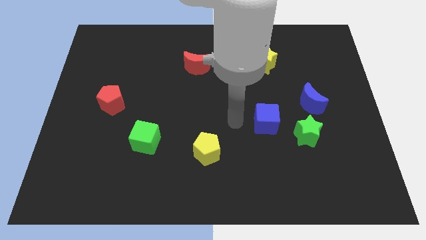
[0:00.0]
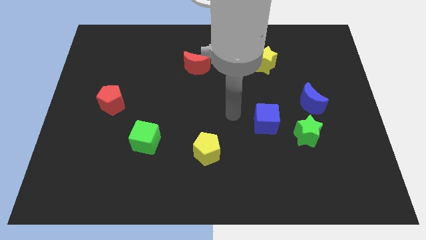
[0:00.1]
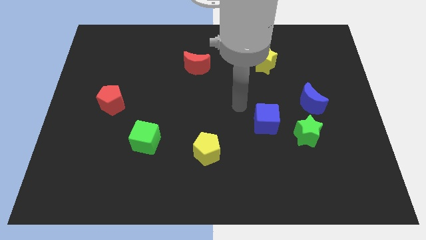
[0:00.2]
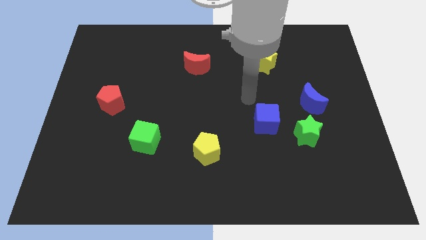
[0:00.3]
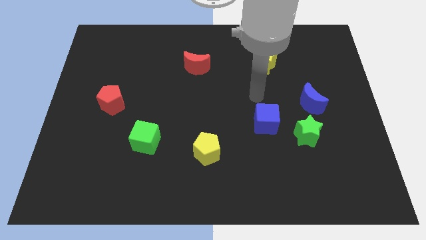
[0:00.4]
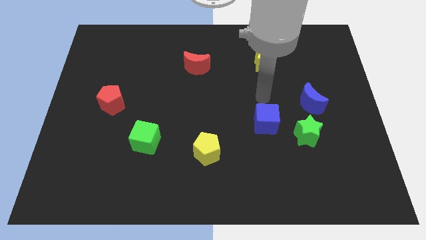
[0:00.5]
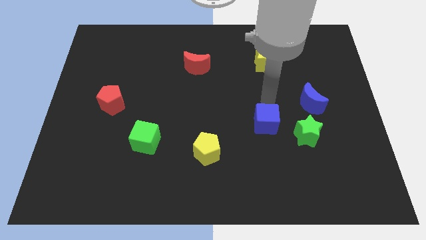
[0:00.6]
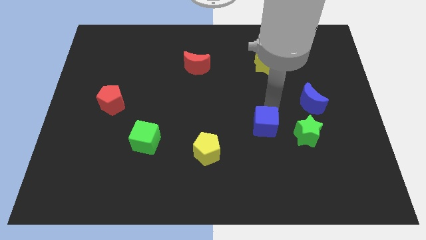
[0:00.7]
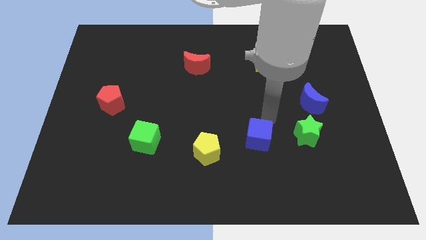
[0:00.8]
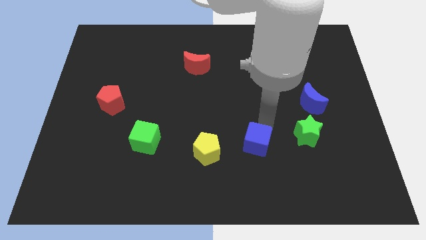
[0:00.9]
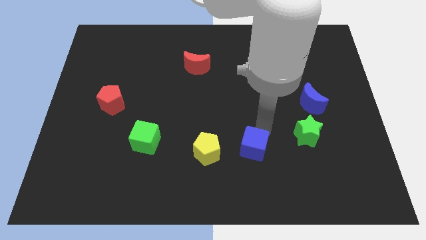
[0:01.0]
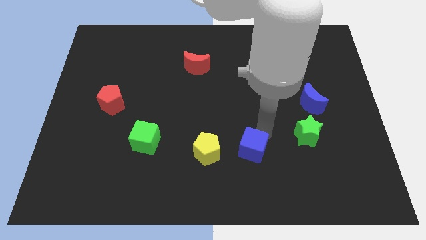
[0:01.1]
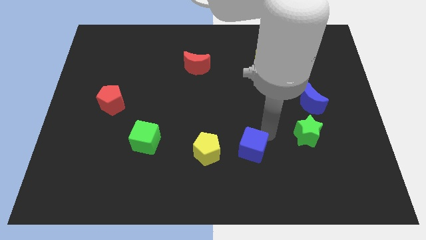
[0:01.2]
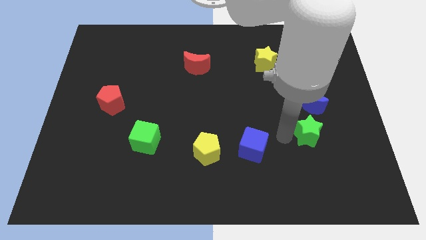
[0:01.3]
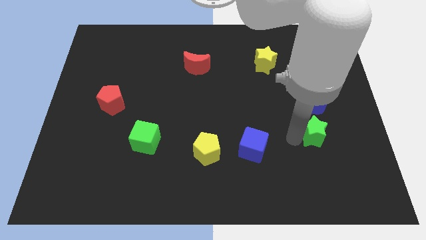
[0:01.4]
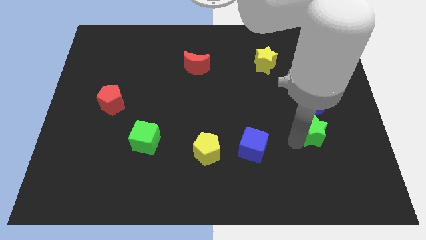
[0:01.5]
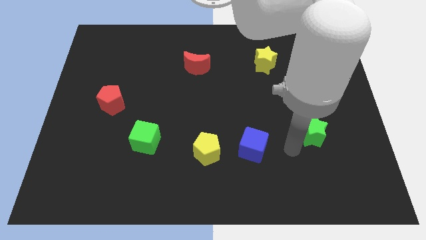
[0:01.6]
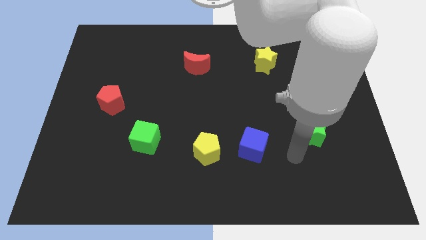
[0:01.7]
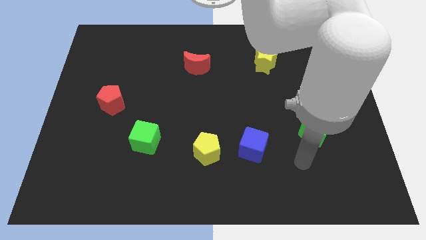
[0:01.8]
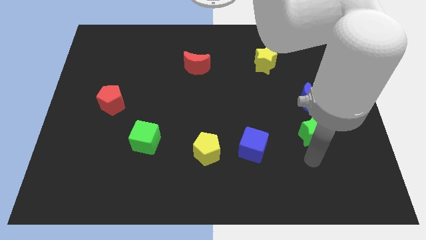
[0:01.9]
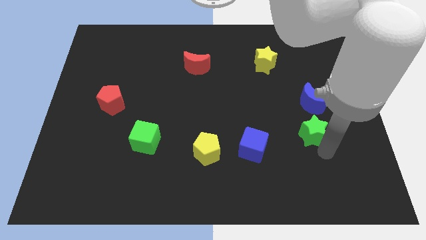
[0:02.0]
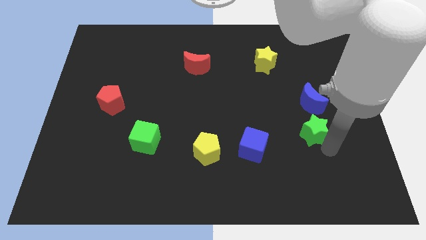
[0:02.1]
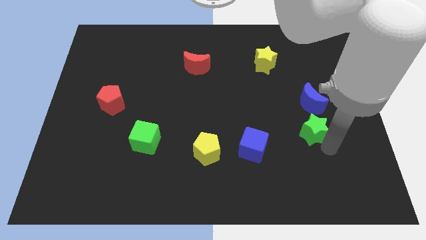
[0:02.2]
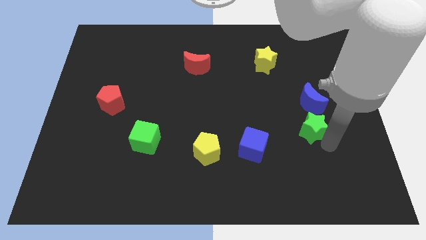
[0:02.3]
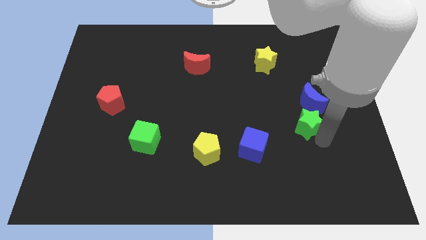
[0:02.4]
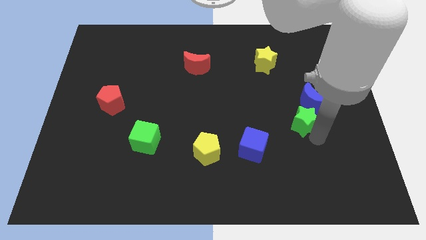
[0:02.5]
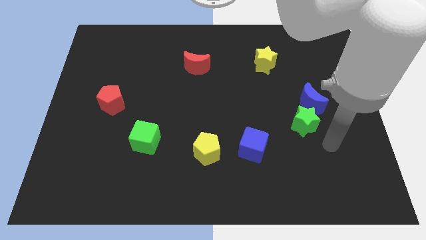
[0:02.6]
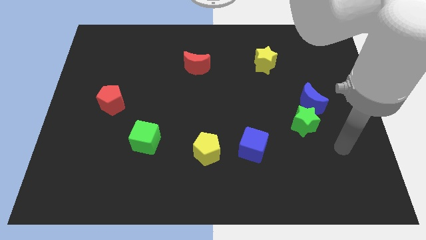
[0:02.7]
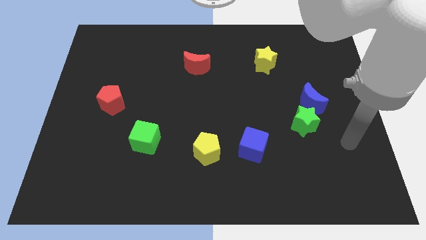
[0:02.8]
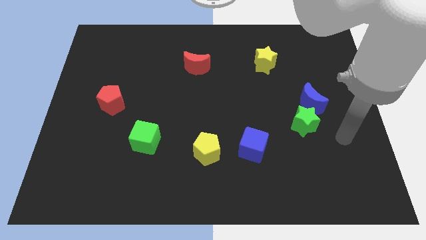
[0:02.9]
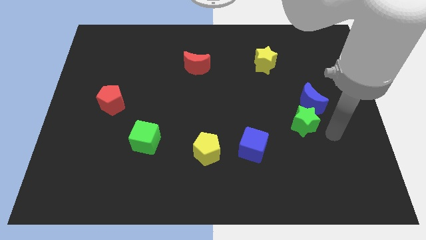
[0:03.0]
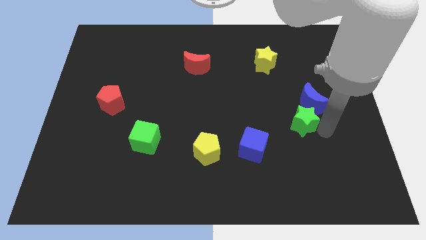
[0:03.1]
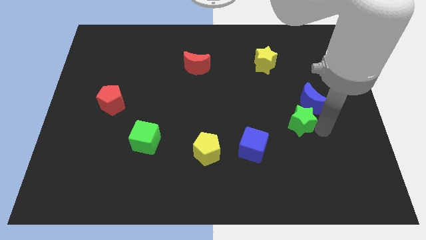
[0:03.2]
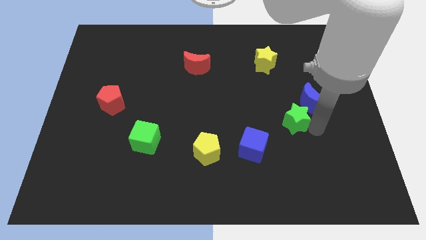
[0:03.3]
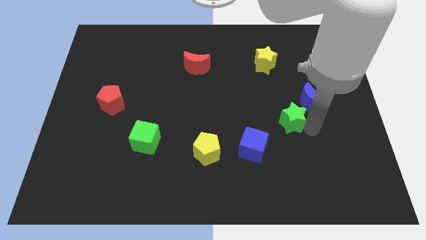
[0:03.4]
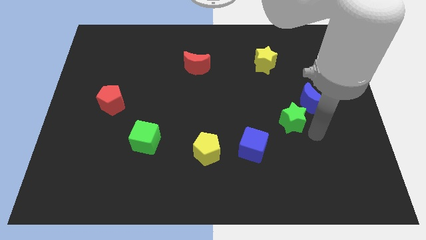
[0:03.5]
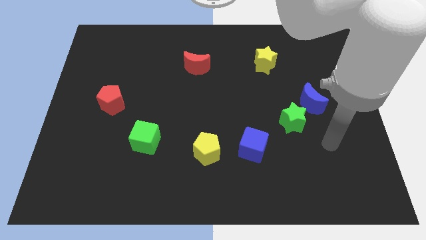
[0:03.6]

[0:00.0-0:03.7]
move the blue moon and green star diagonally

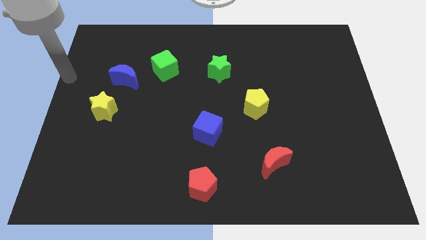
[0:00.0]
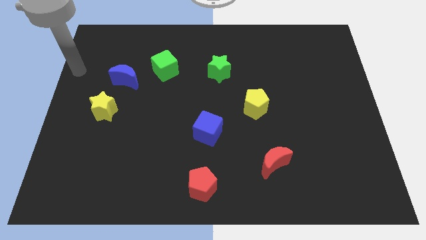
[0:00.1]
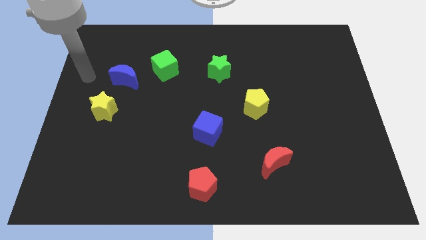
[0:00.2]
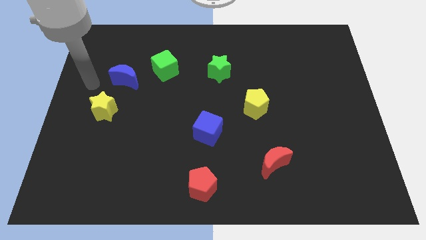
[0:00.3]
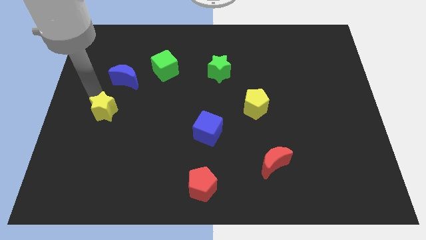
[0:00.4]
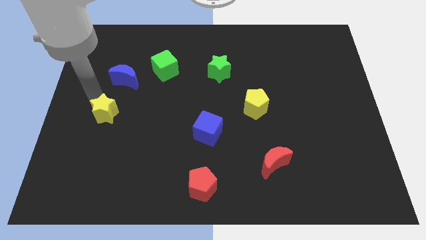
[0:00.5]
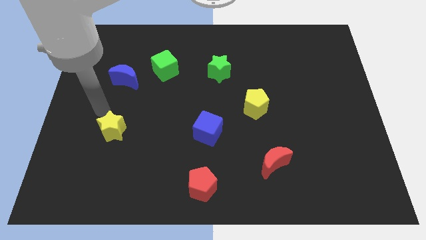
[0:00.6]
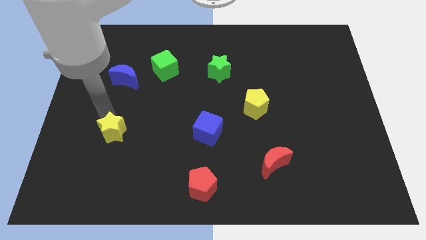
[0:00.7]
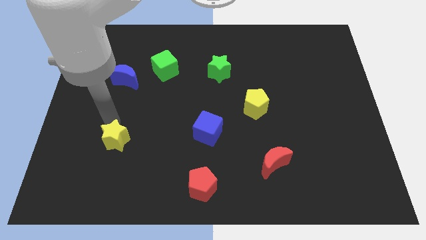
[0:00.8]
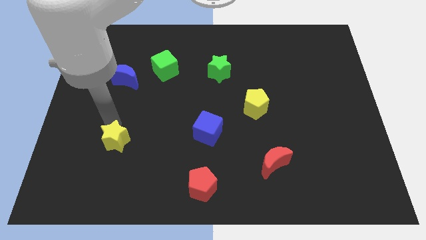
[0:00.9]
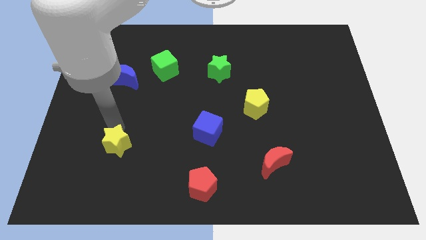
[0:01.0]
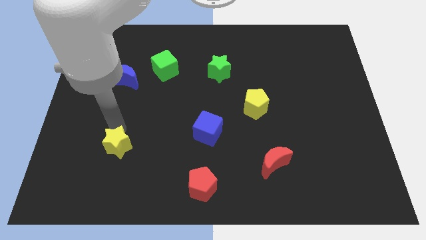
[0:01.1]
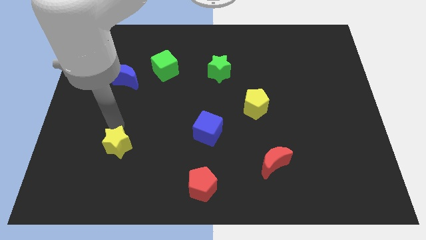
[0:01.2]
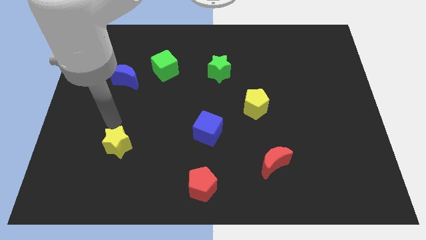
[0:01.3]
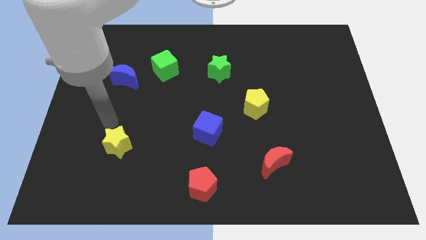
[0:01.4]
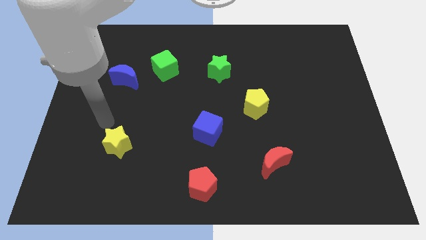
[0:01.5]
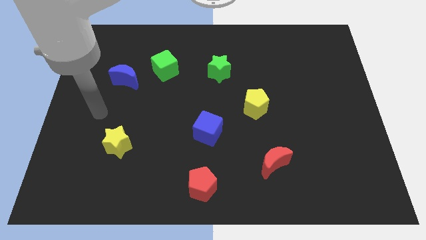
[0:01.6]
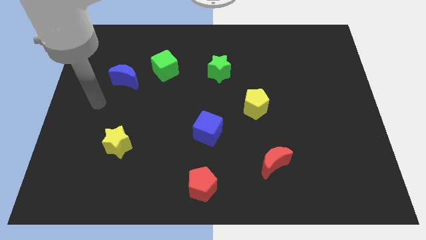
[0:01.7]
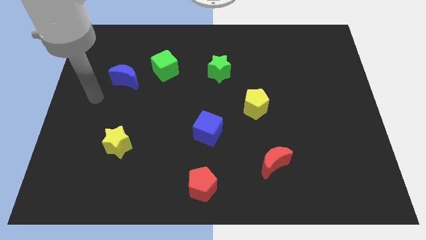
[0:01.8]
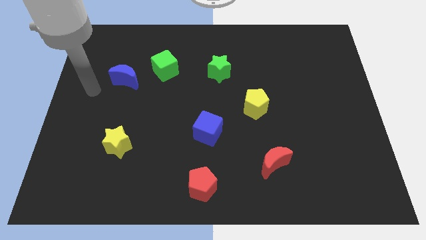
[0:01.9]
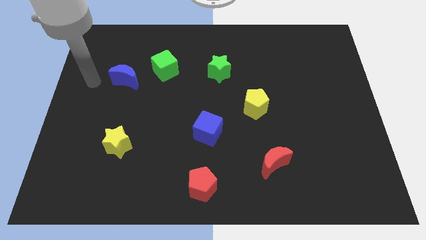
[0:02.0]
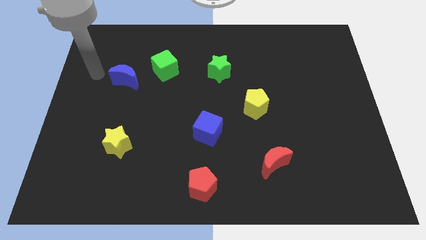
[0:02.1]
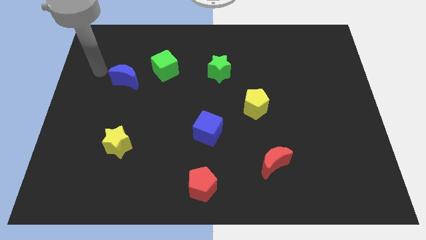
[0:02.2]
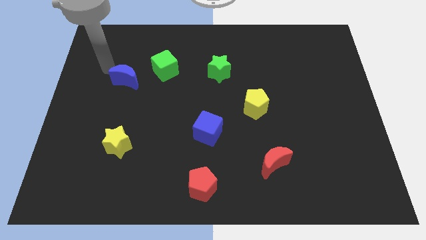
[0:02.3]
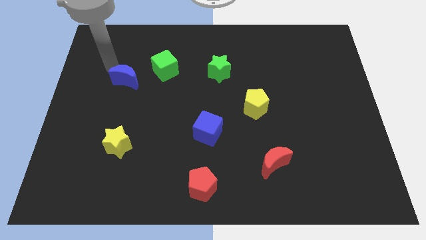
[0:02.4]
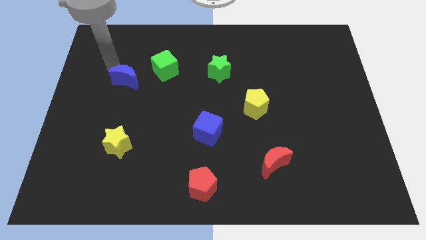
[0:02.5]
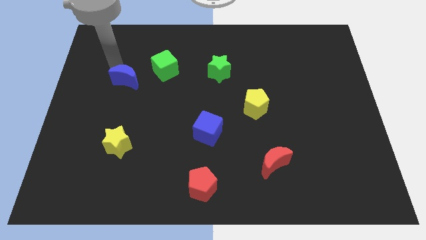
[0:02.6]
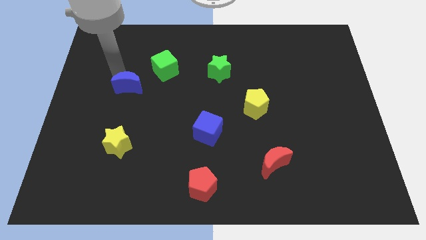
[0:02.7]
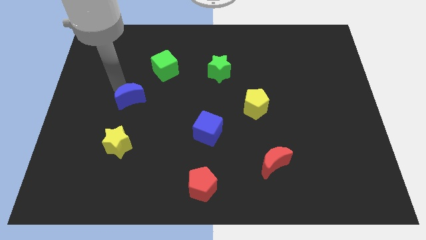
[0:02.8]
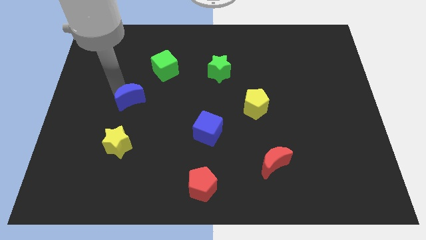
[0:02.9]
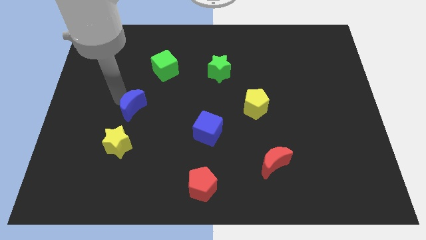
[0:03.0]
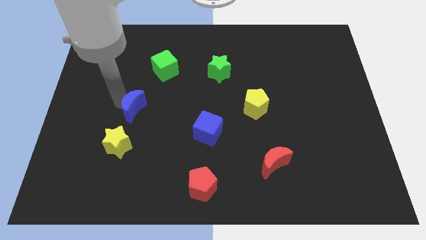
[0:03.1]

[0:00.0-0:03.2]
push the yellow star slightly towards the bottom center of the board

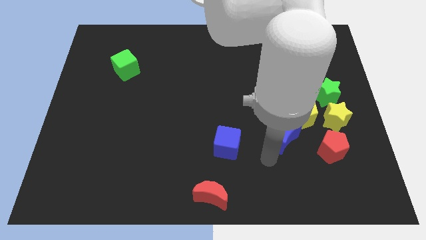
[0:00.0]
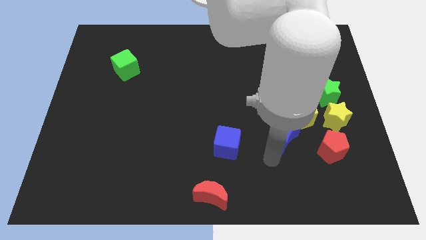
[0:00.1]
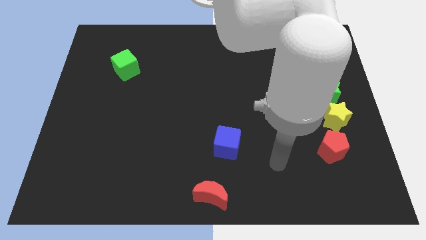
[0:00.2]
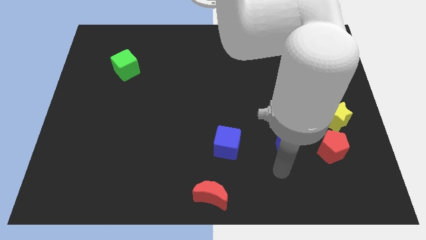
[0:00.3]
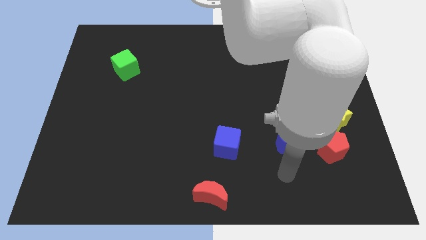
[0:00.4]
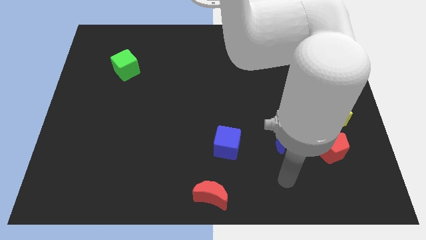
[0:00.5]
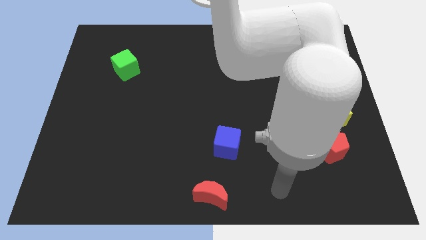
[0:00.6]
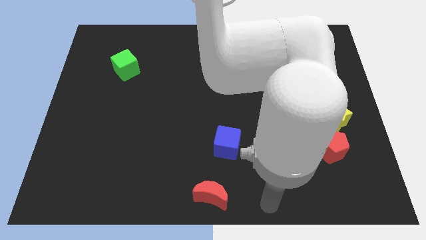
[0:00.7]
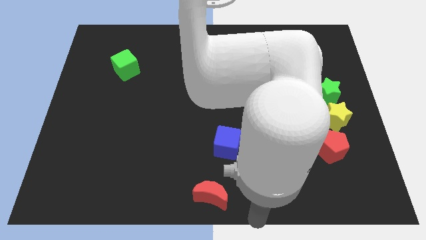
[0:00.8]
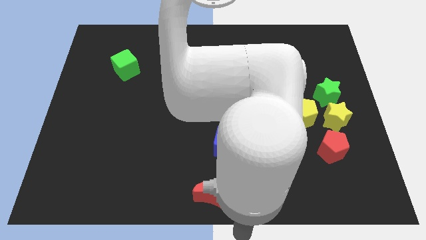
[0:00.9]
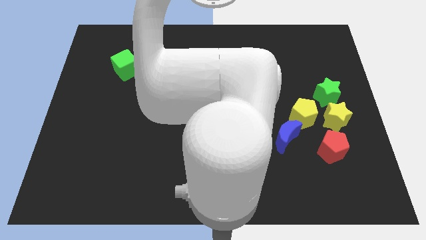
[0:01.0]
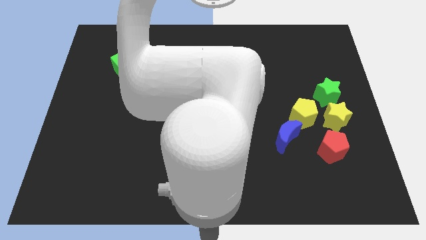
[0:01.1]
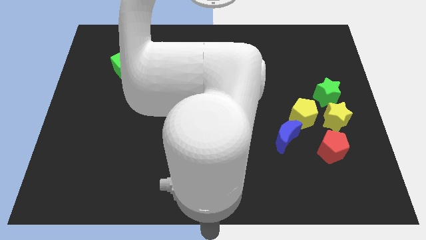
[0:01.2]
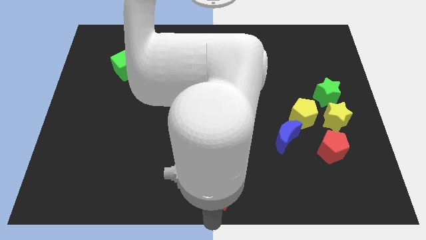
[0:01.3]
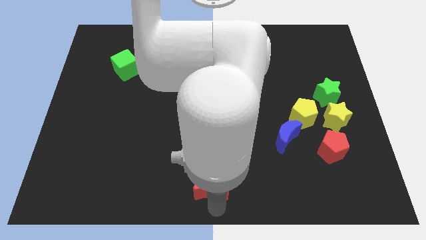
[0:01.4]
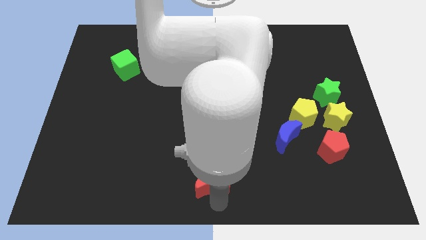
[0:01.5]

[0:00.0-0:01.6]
put your hand vertically below the red moon

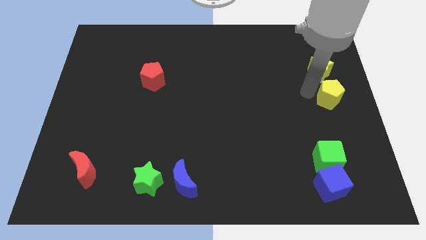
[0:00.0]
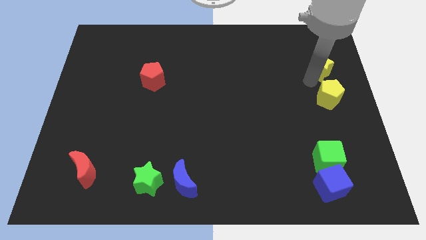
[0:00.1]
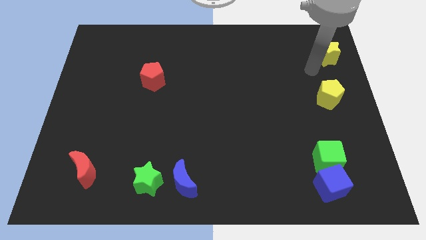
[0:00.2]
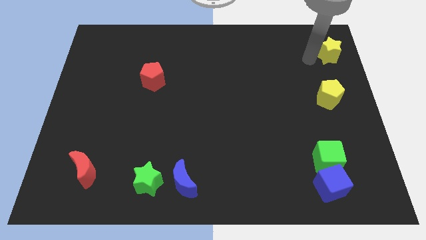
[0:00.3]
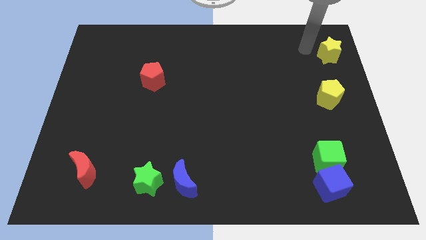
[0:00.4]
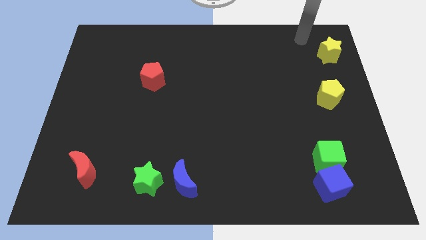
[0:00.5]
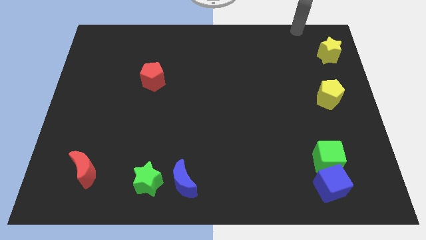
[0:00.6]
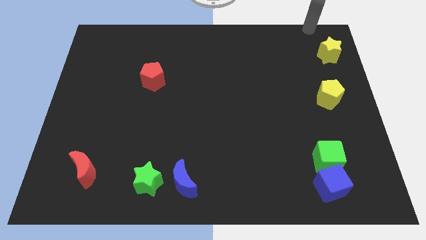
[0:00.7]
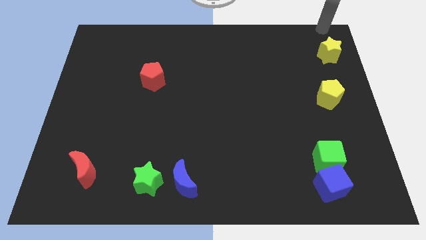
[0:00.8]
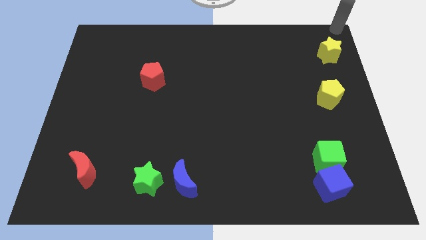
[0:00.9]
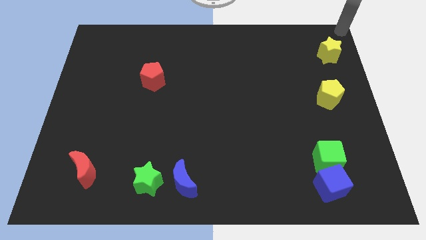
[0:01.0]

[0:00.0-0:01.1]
separate the yellow star from yellow pentagon
